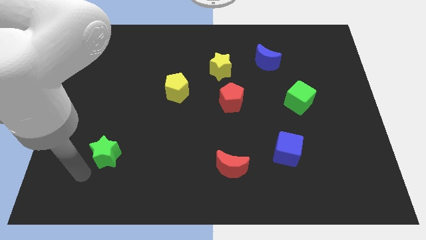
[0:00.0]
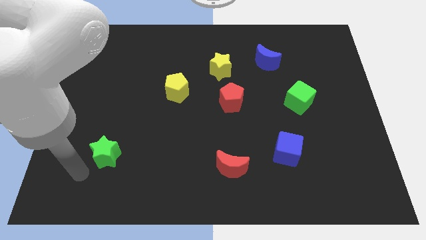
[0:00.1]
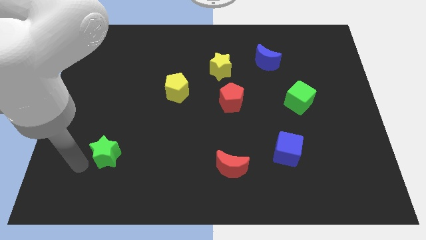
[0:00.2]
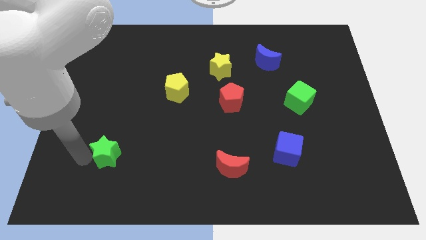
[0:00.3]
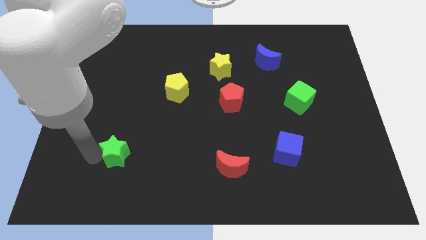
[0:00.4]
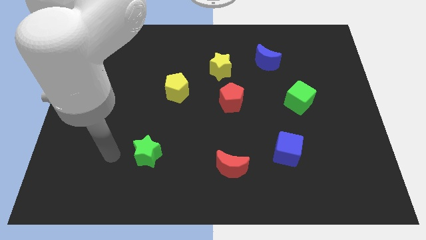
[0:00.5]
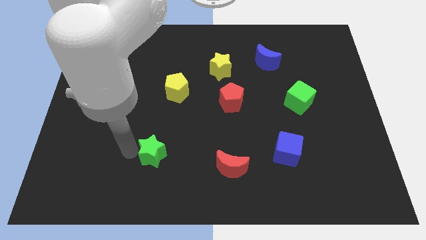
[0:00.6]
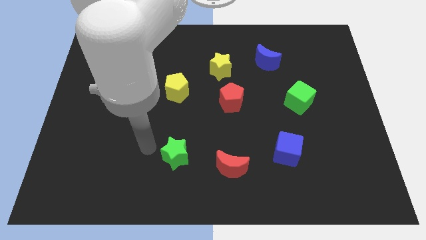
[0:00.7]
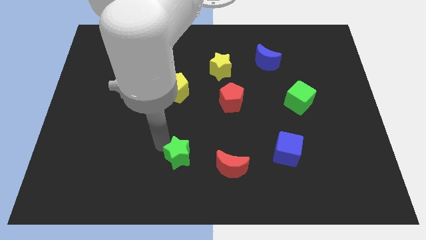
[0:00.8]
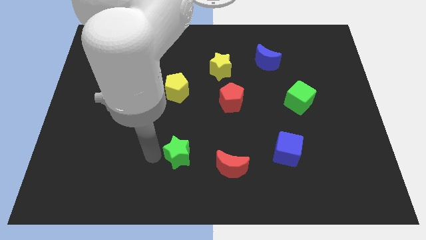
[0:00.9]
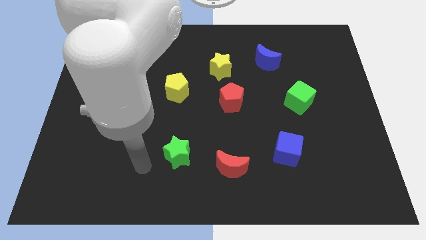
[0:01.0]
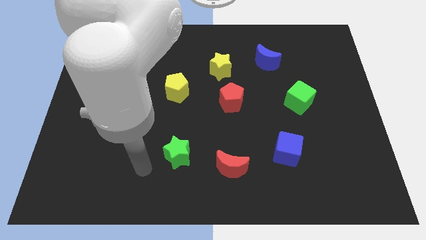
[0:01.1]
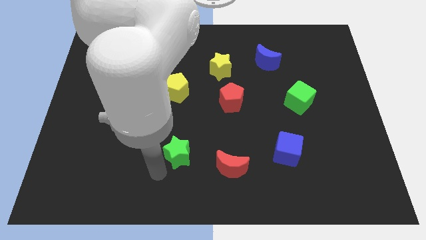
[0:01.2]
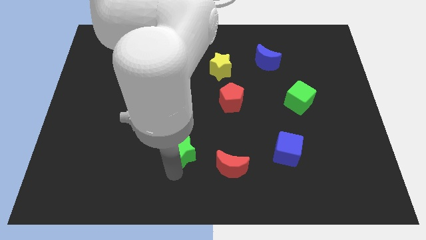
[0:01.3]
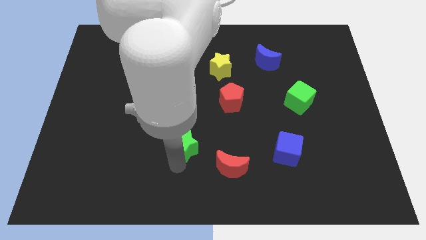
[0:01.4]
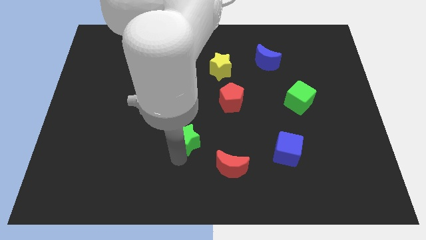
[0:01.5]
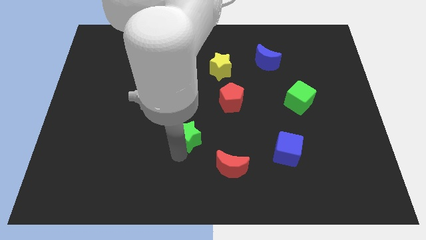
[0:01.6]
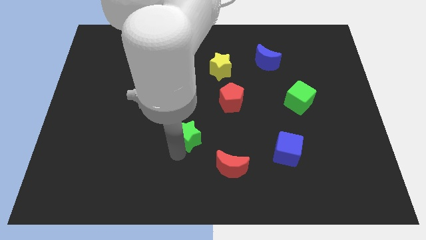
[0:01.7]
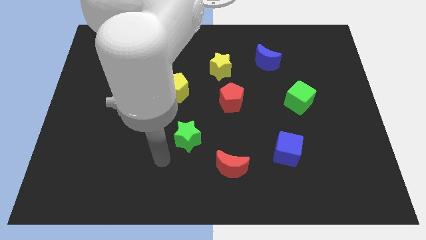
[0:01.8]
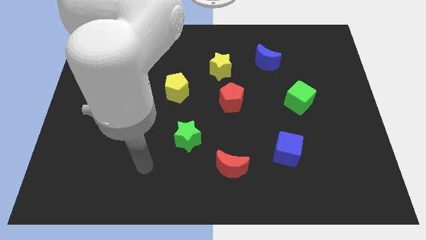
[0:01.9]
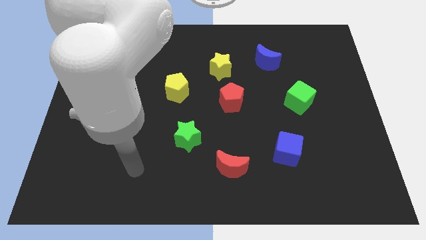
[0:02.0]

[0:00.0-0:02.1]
move the green star towards center

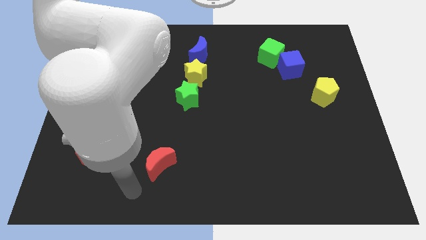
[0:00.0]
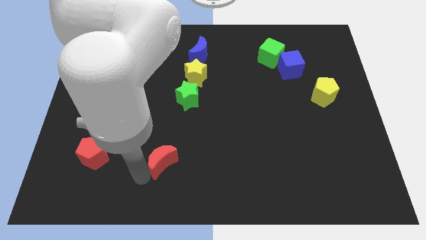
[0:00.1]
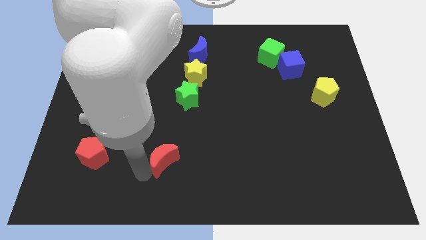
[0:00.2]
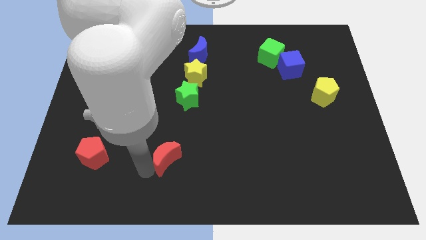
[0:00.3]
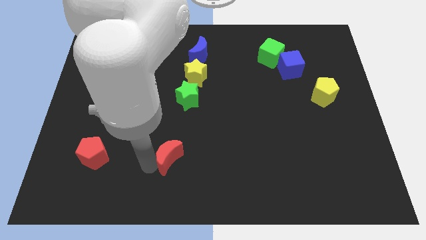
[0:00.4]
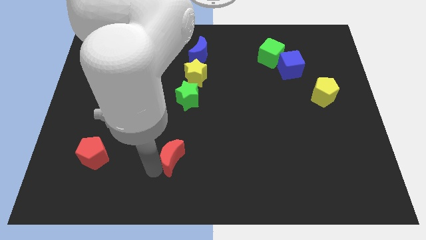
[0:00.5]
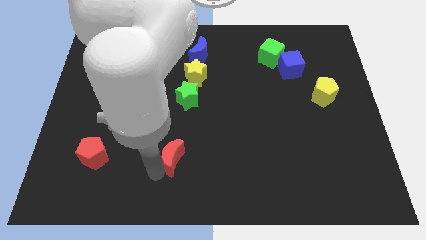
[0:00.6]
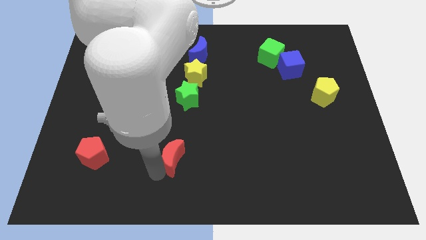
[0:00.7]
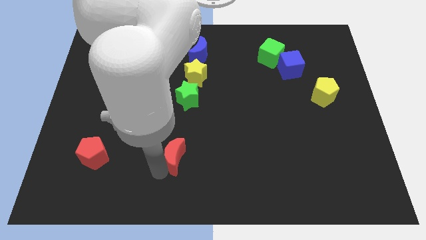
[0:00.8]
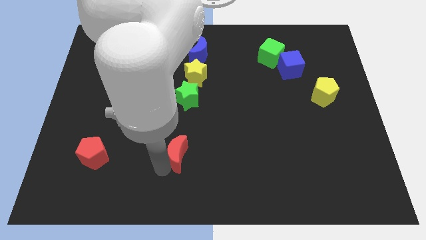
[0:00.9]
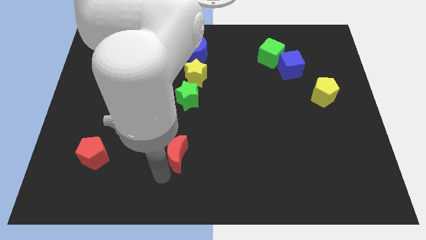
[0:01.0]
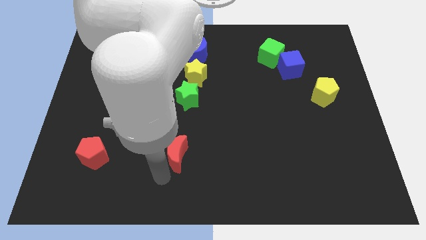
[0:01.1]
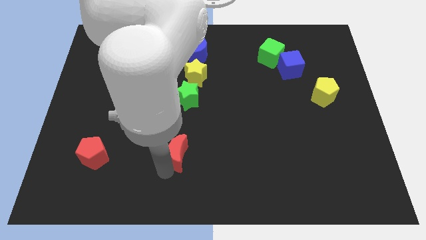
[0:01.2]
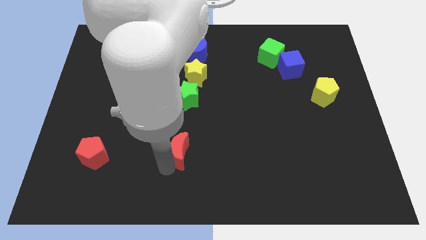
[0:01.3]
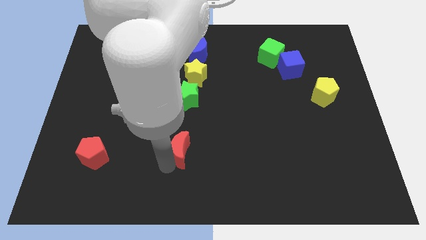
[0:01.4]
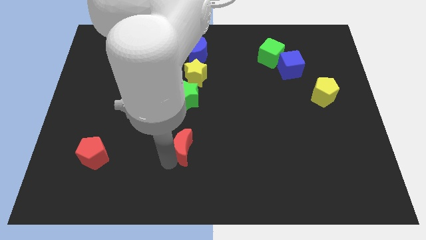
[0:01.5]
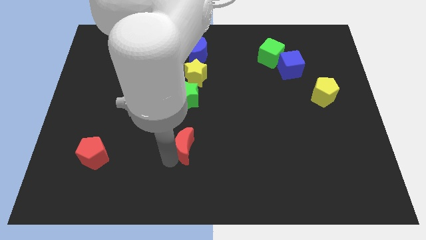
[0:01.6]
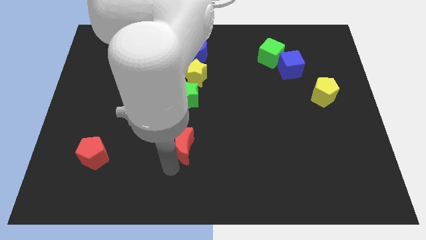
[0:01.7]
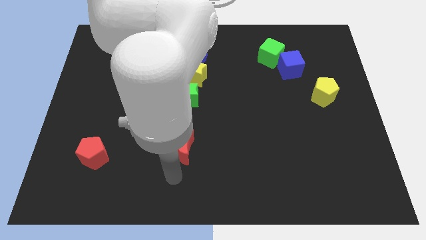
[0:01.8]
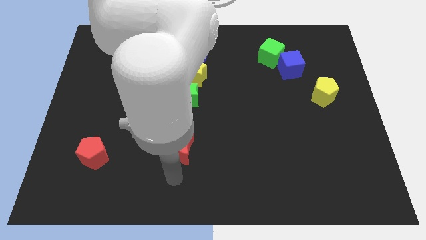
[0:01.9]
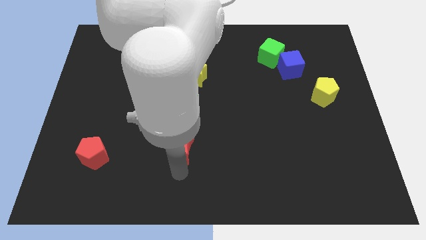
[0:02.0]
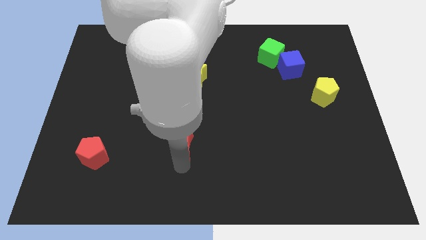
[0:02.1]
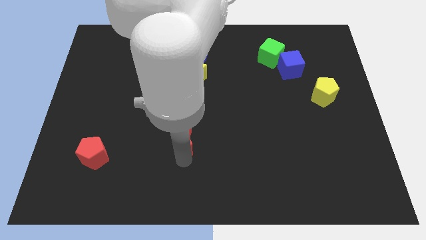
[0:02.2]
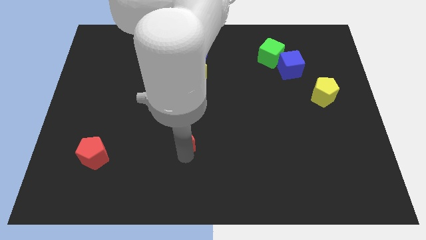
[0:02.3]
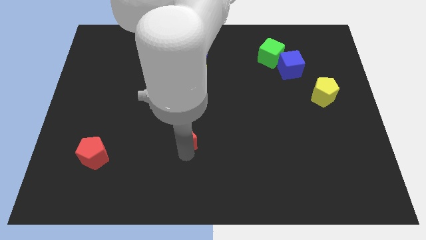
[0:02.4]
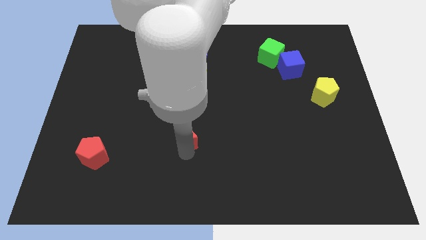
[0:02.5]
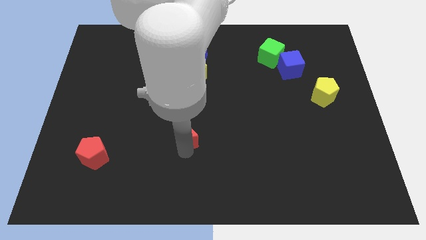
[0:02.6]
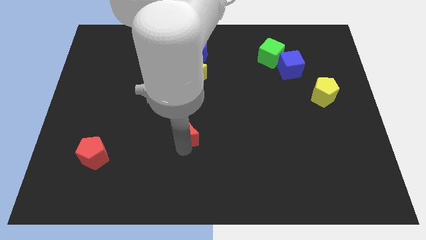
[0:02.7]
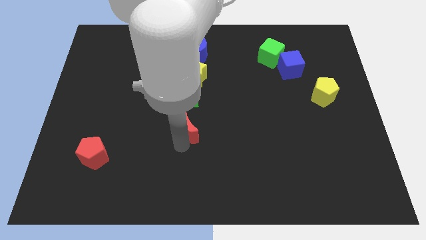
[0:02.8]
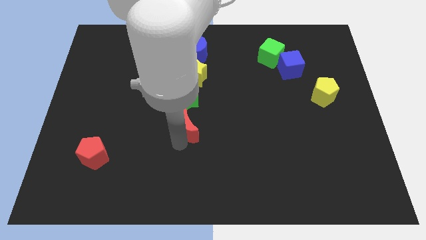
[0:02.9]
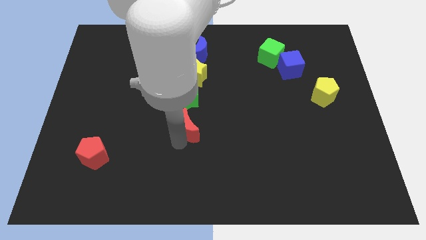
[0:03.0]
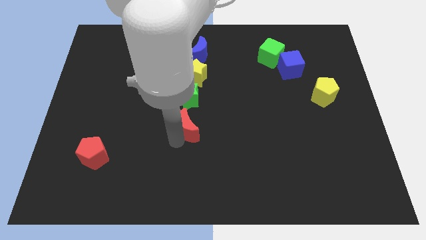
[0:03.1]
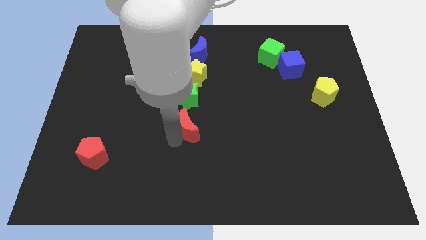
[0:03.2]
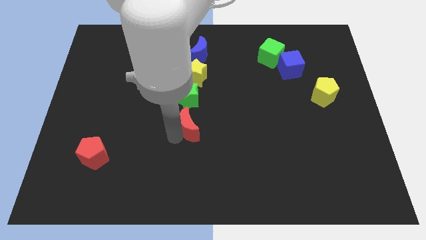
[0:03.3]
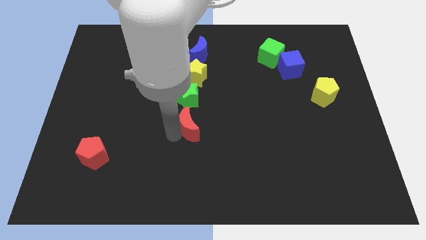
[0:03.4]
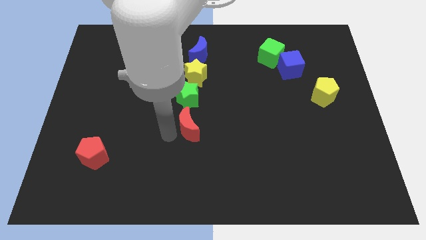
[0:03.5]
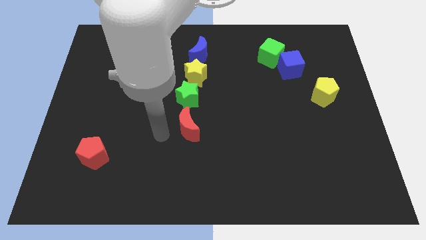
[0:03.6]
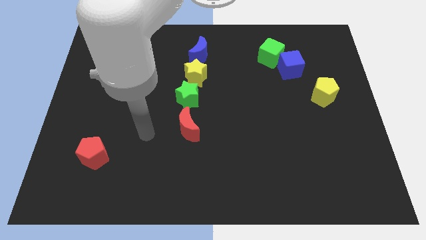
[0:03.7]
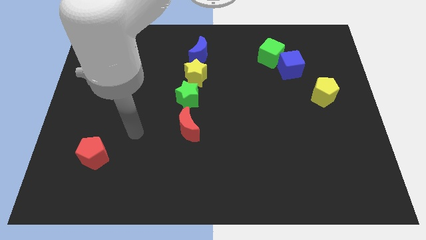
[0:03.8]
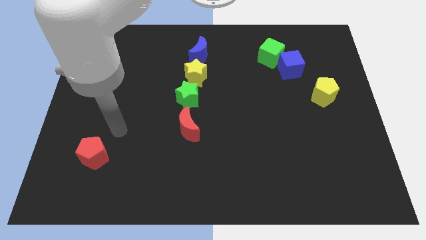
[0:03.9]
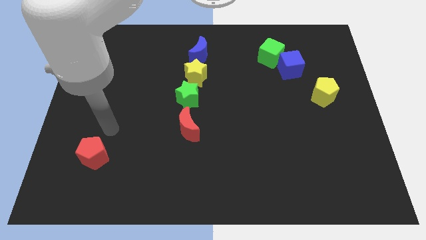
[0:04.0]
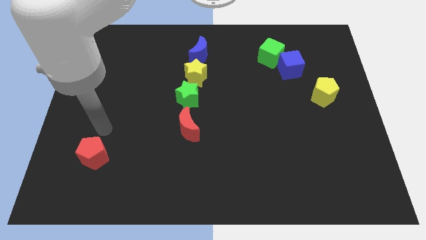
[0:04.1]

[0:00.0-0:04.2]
move the red crescent below the green star

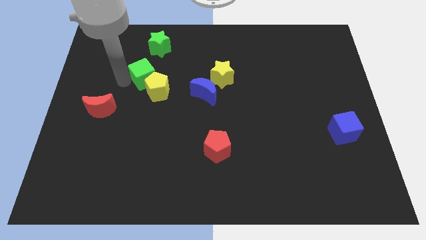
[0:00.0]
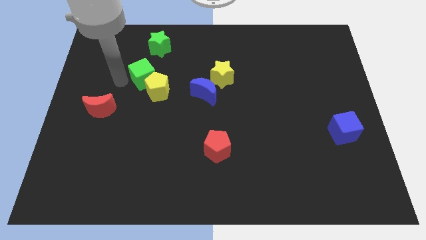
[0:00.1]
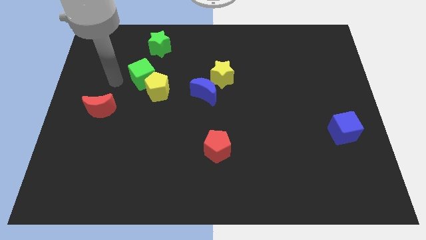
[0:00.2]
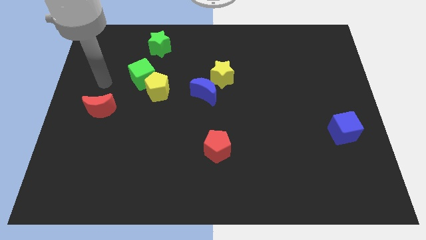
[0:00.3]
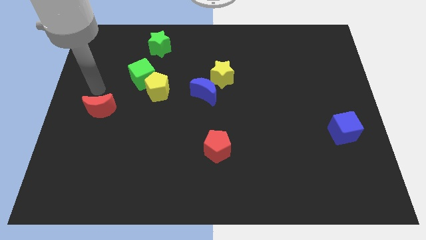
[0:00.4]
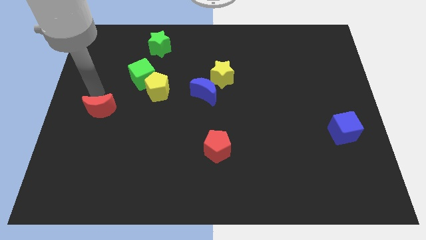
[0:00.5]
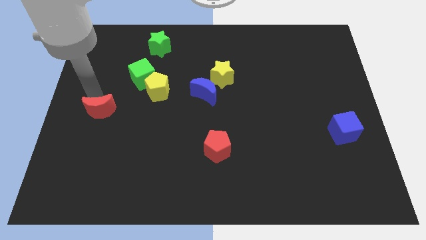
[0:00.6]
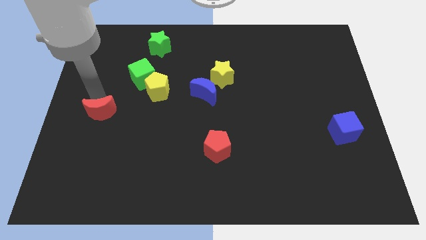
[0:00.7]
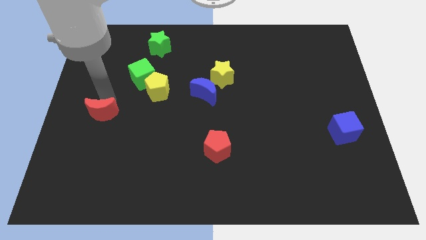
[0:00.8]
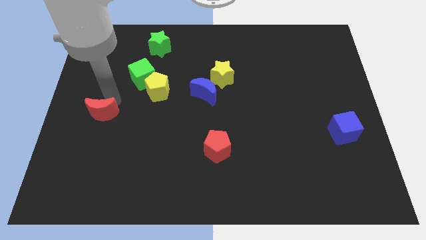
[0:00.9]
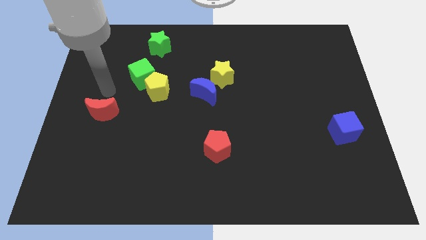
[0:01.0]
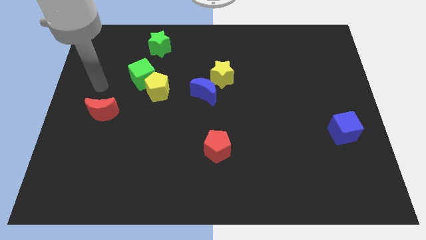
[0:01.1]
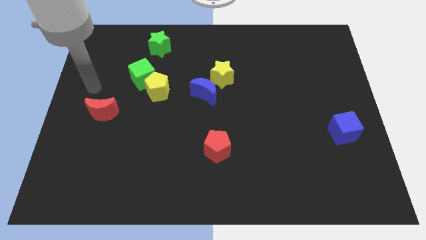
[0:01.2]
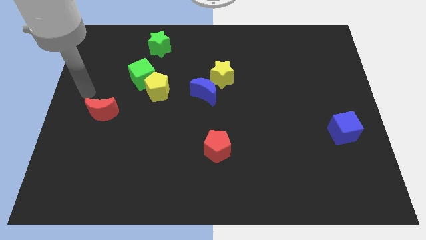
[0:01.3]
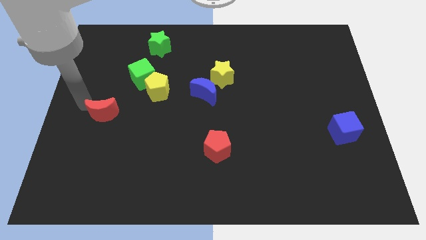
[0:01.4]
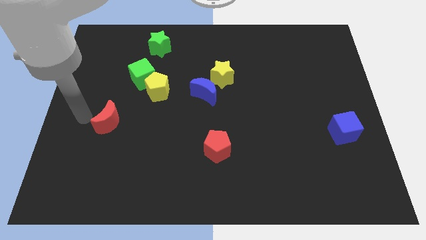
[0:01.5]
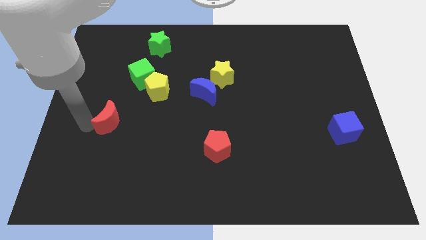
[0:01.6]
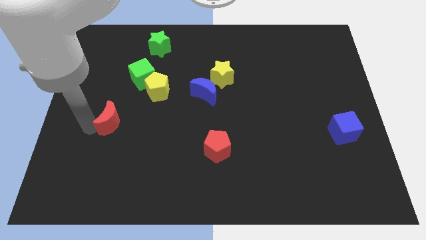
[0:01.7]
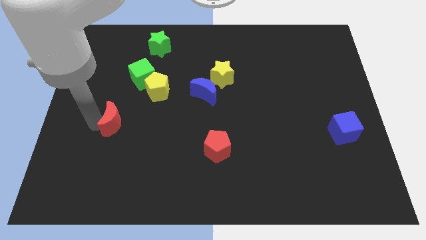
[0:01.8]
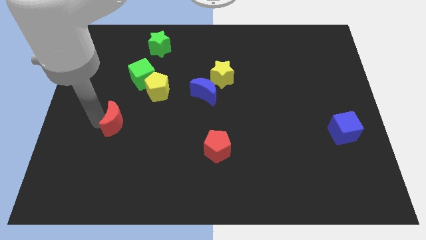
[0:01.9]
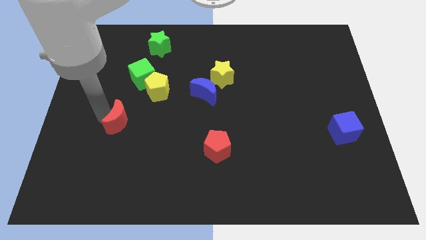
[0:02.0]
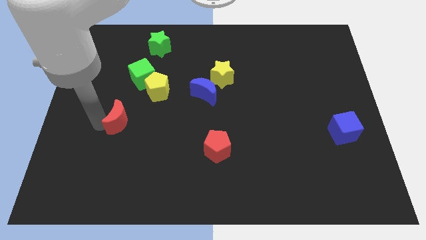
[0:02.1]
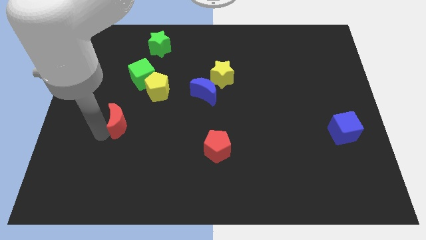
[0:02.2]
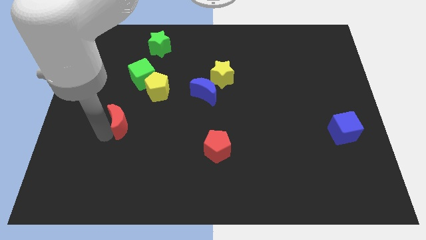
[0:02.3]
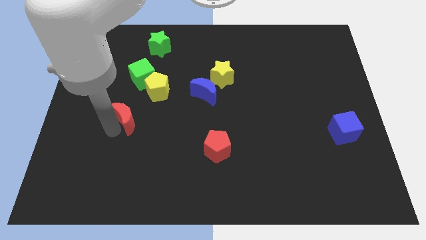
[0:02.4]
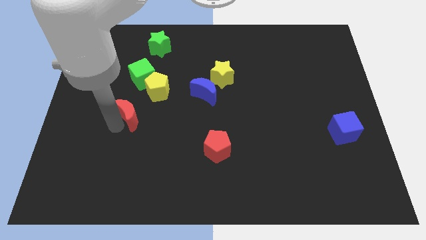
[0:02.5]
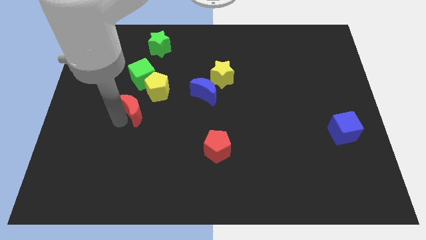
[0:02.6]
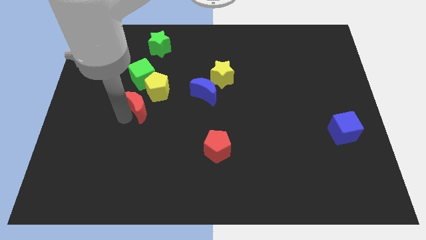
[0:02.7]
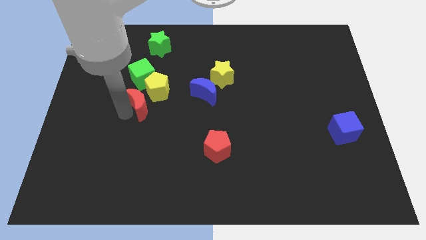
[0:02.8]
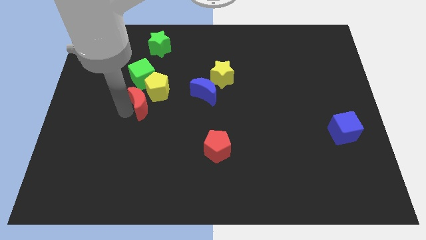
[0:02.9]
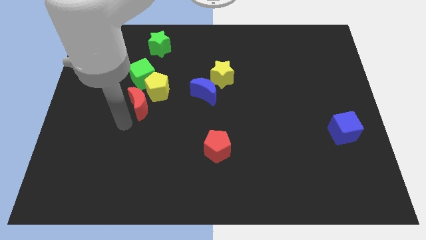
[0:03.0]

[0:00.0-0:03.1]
push the red moon closer to the yellow pentagon
